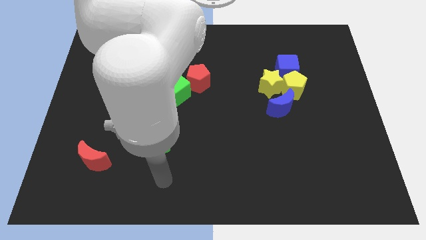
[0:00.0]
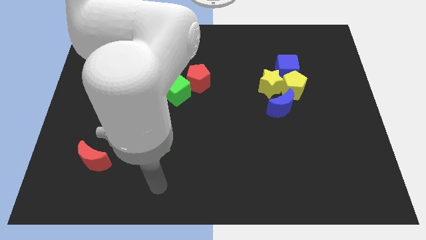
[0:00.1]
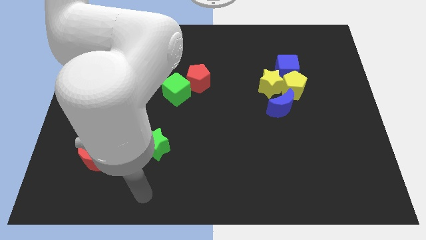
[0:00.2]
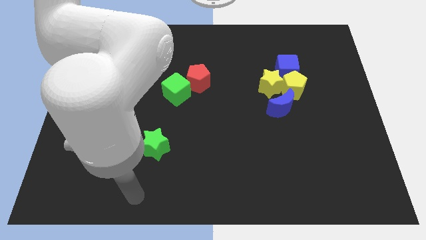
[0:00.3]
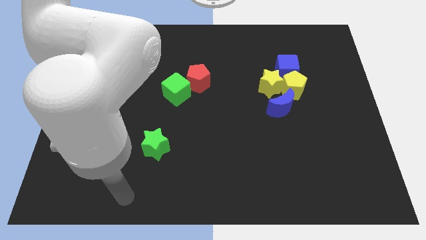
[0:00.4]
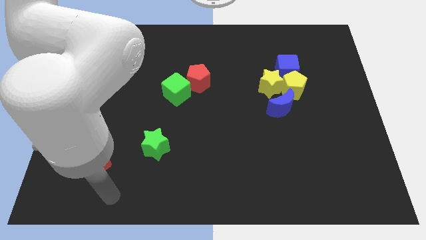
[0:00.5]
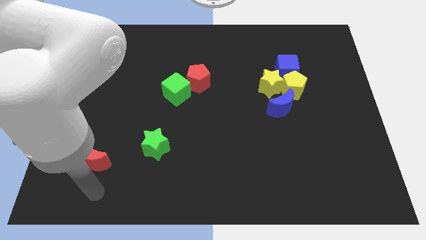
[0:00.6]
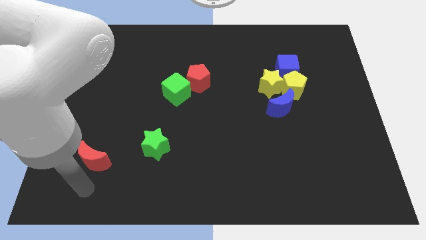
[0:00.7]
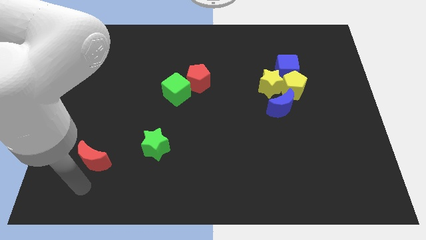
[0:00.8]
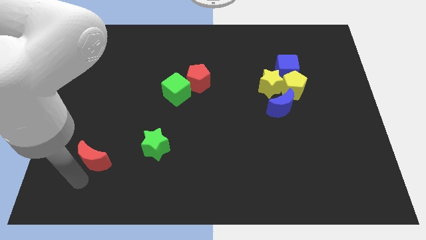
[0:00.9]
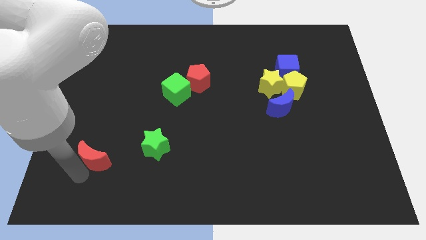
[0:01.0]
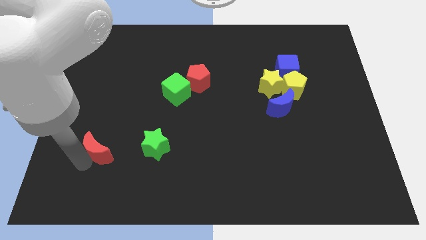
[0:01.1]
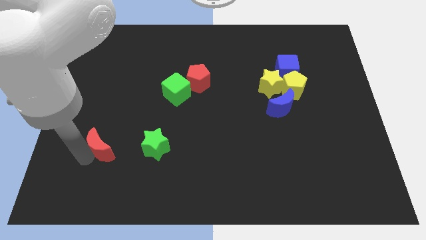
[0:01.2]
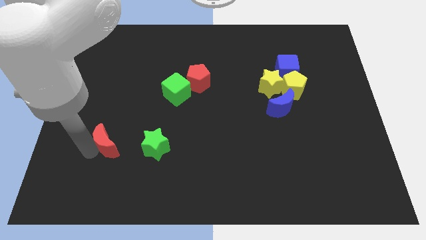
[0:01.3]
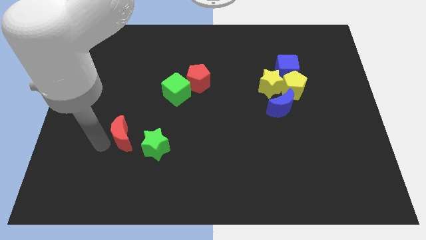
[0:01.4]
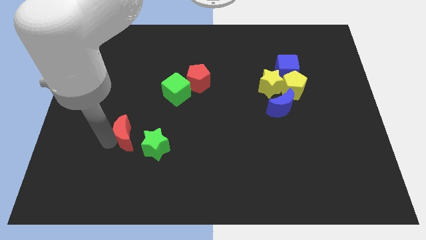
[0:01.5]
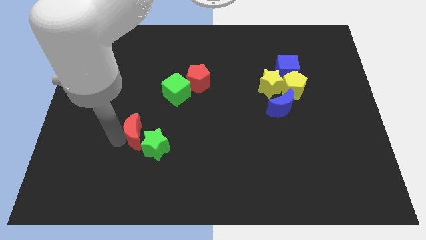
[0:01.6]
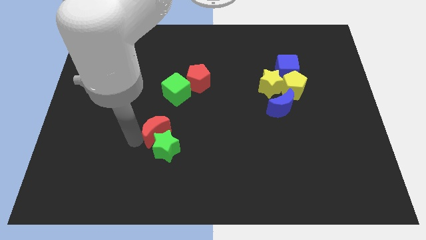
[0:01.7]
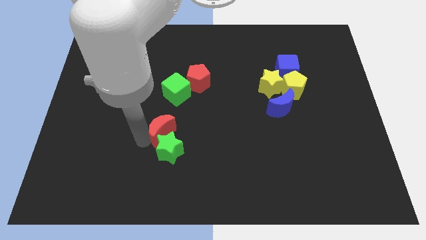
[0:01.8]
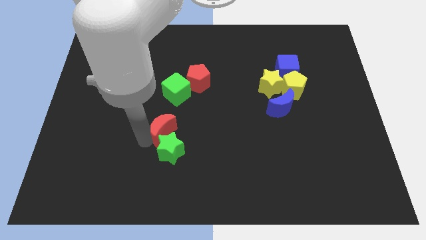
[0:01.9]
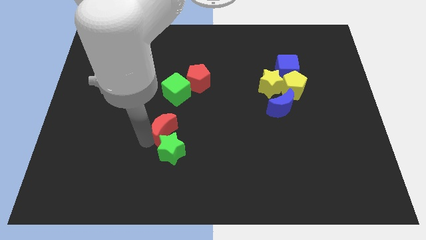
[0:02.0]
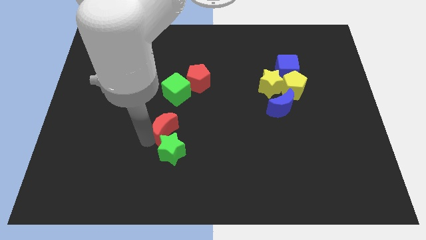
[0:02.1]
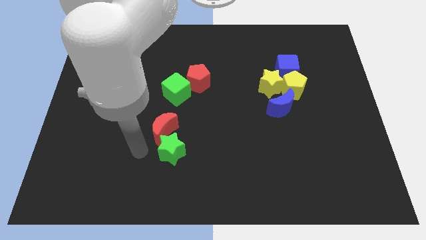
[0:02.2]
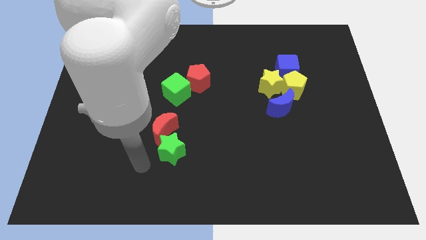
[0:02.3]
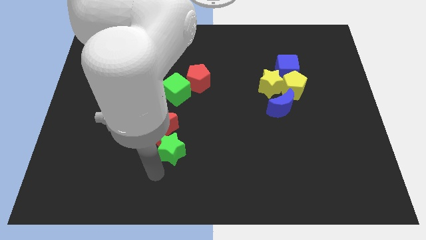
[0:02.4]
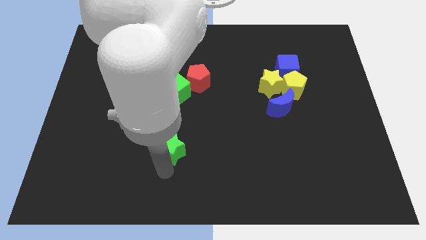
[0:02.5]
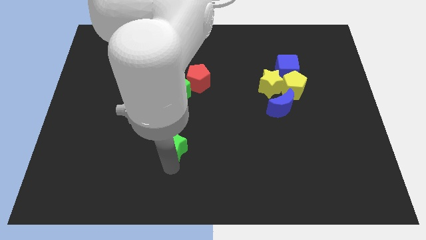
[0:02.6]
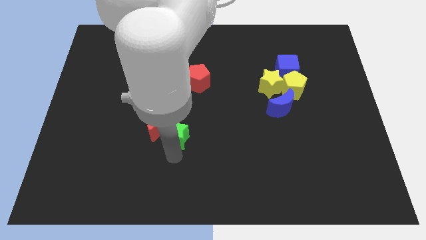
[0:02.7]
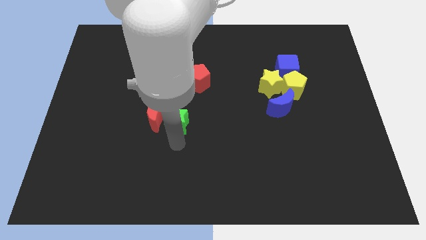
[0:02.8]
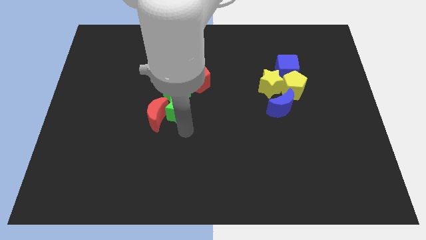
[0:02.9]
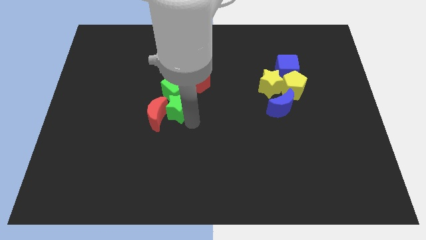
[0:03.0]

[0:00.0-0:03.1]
push the red moon into the green star

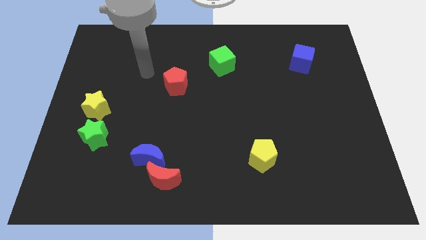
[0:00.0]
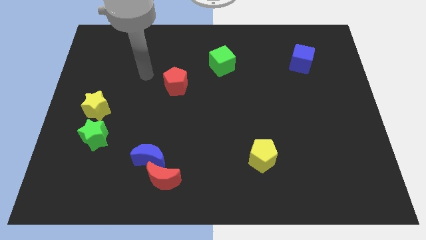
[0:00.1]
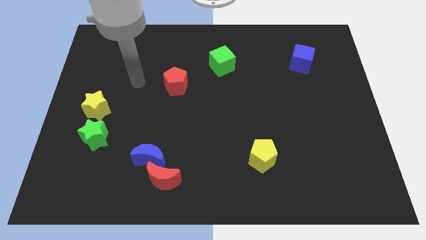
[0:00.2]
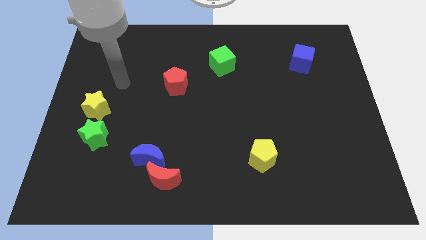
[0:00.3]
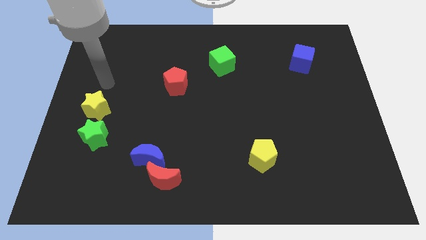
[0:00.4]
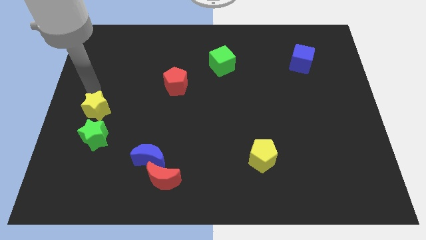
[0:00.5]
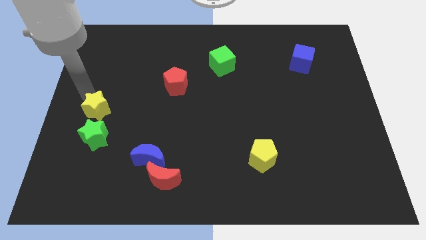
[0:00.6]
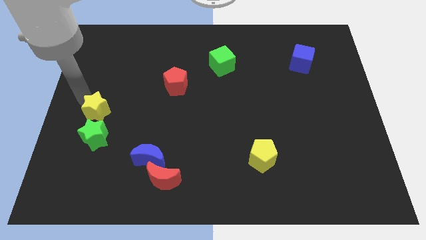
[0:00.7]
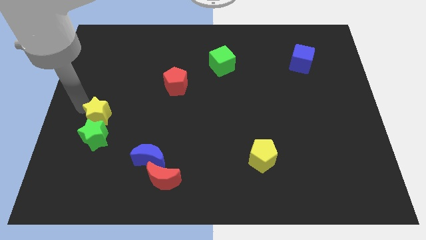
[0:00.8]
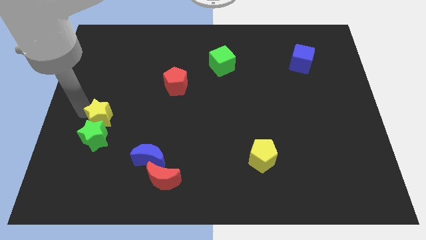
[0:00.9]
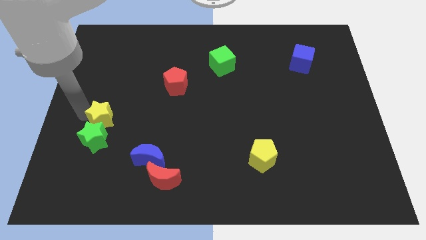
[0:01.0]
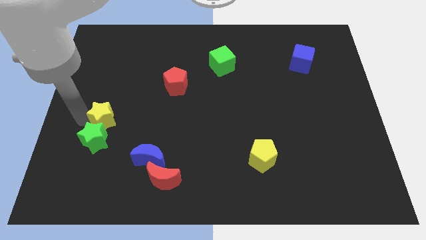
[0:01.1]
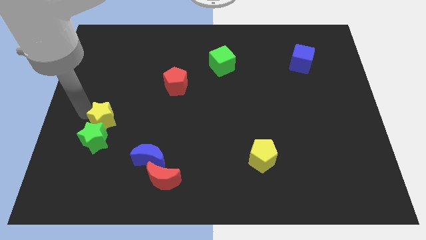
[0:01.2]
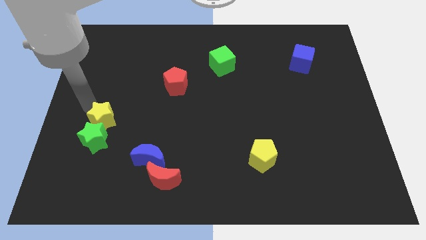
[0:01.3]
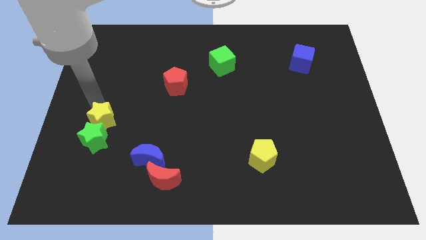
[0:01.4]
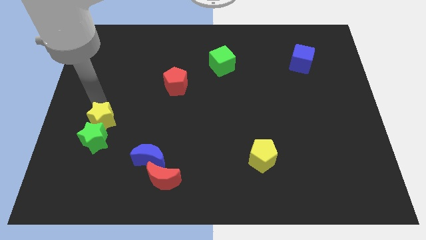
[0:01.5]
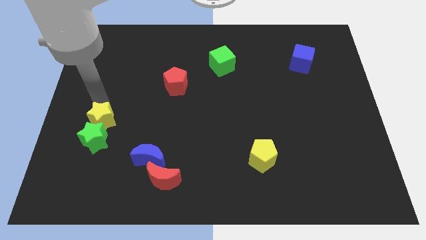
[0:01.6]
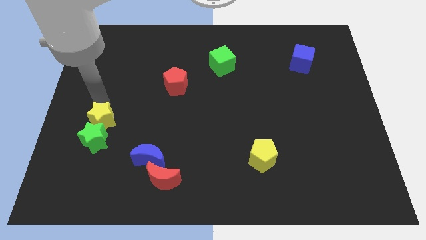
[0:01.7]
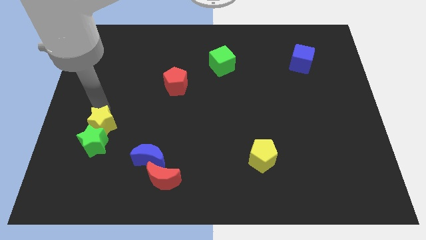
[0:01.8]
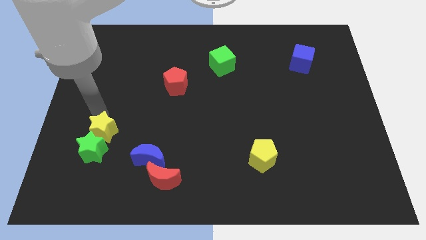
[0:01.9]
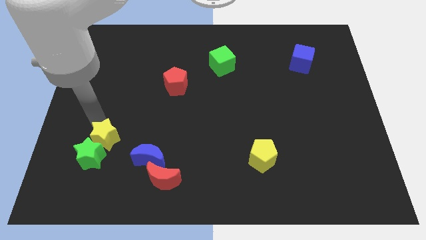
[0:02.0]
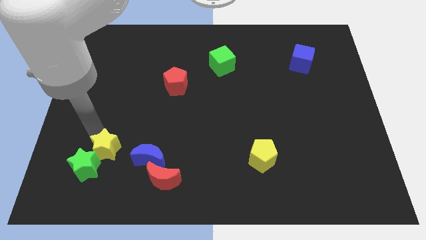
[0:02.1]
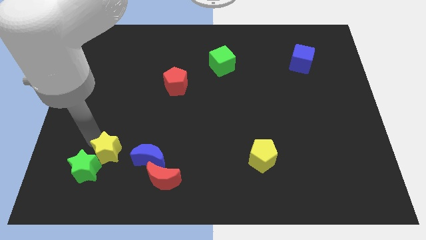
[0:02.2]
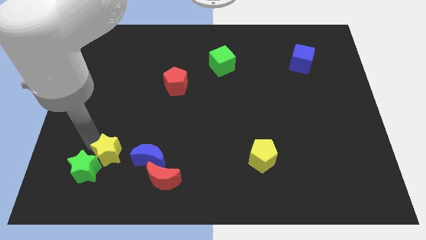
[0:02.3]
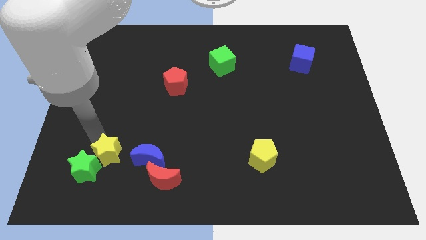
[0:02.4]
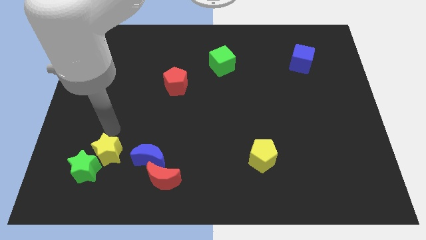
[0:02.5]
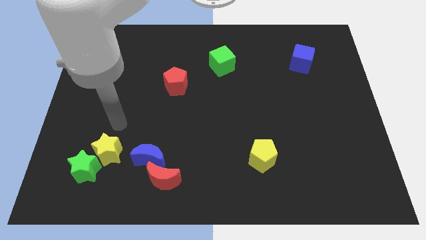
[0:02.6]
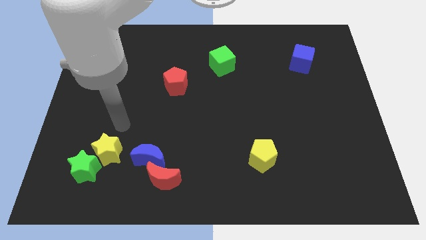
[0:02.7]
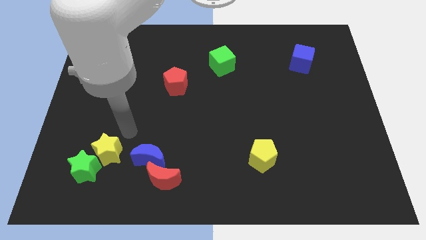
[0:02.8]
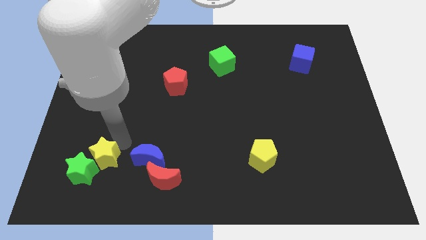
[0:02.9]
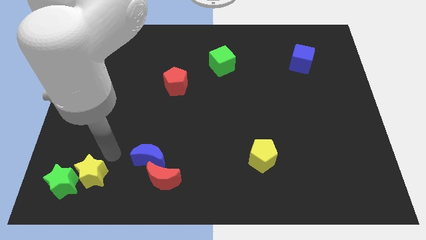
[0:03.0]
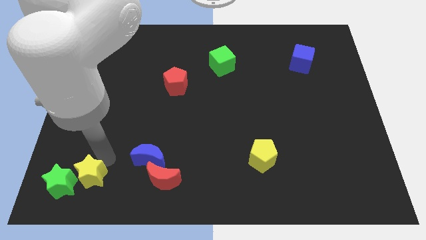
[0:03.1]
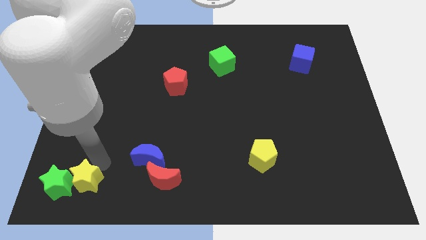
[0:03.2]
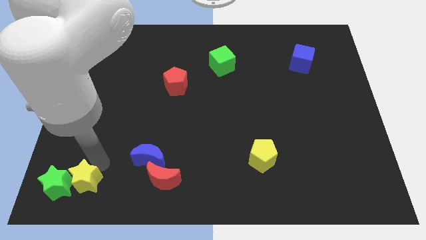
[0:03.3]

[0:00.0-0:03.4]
move yellow star to the bottom

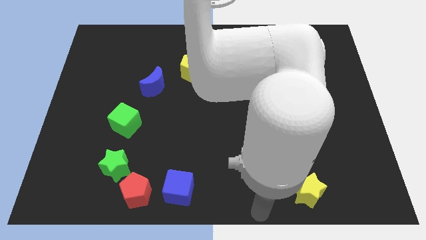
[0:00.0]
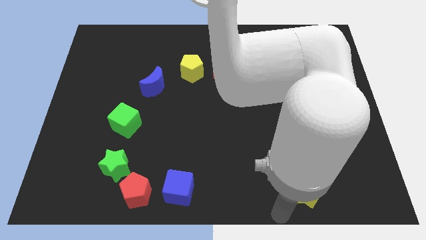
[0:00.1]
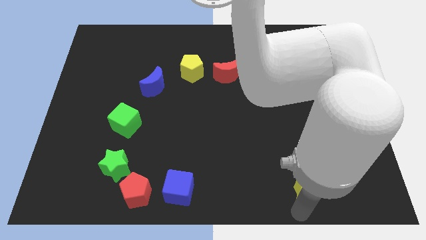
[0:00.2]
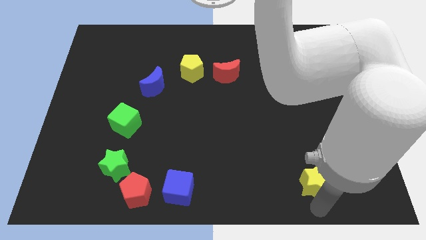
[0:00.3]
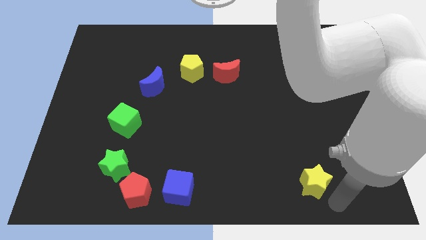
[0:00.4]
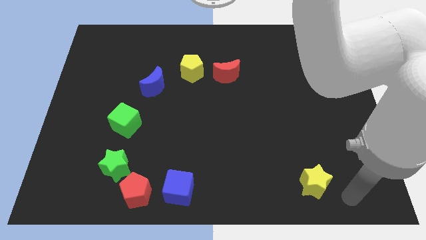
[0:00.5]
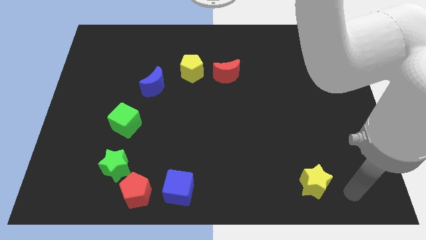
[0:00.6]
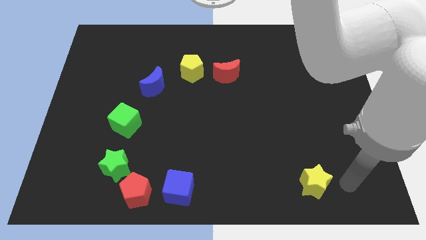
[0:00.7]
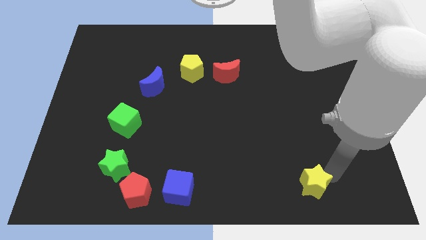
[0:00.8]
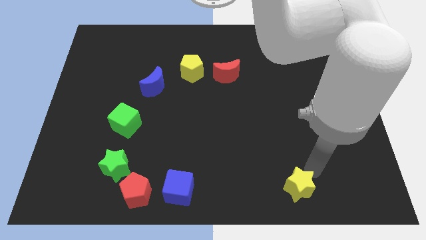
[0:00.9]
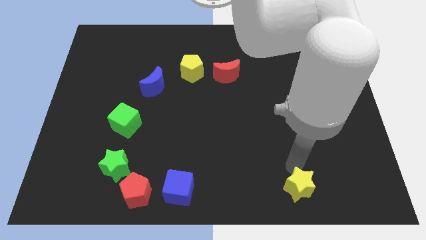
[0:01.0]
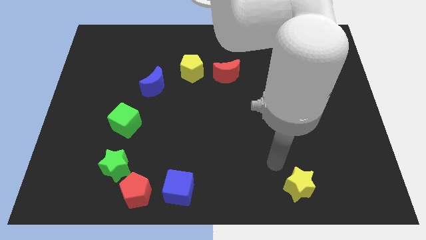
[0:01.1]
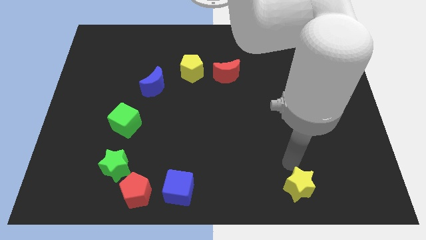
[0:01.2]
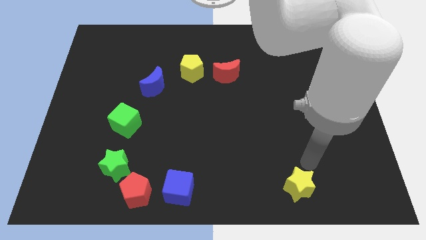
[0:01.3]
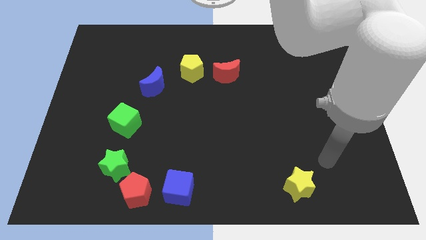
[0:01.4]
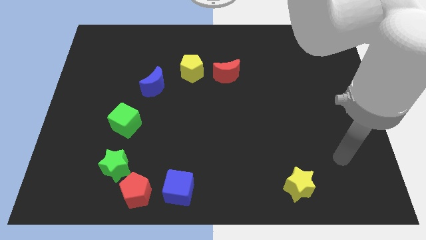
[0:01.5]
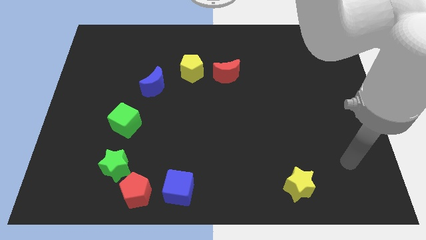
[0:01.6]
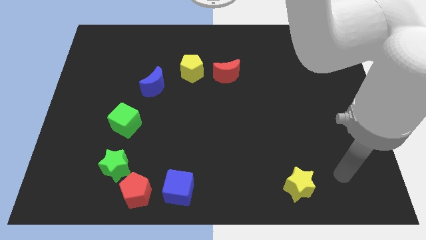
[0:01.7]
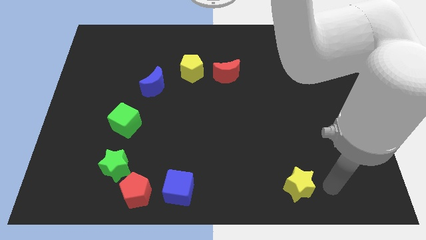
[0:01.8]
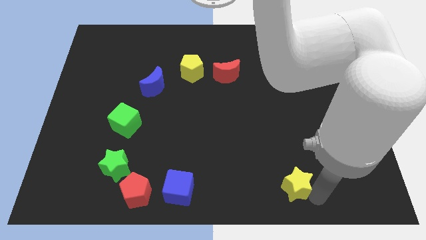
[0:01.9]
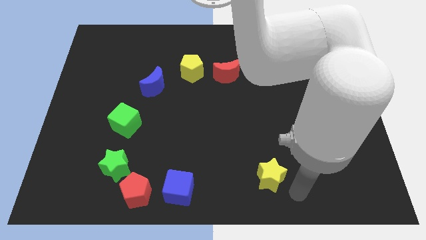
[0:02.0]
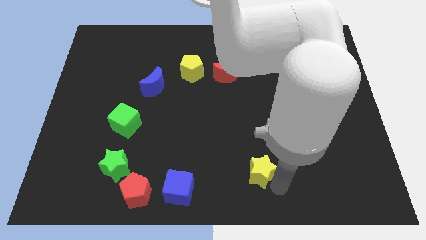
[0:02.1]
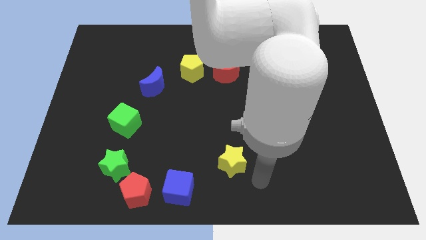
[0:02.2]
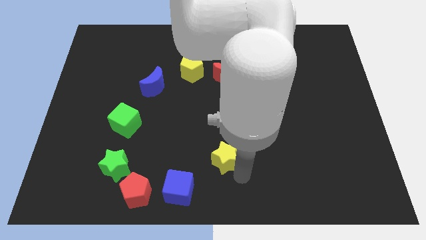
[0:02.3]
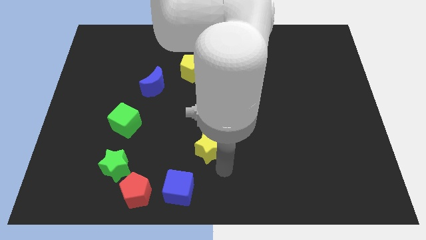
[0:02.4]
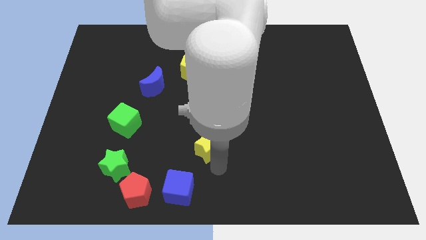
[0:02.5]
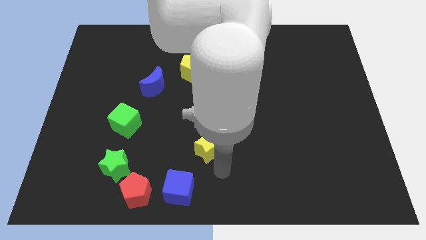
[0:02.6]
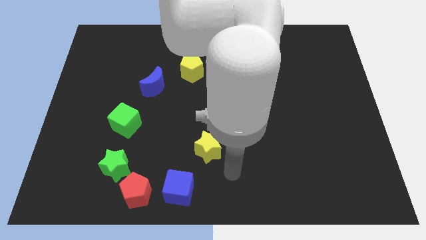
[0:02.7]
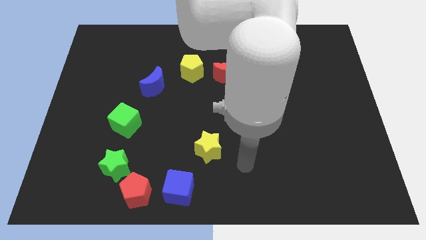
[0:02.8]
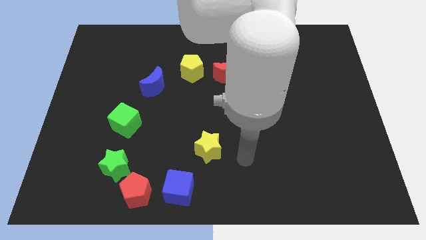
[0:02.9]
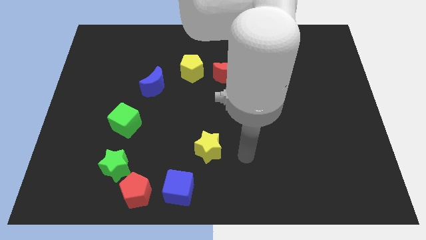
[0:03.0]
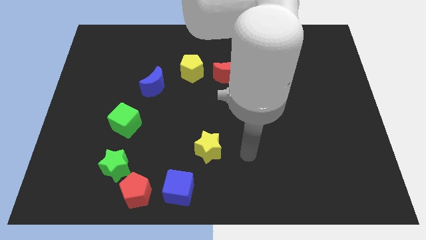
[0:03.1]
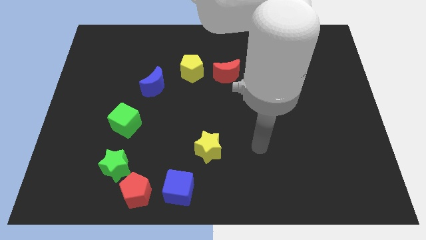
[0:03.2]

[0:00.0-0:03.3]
push the yellow star towards the top side of the blue cube
